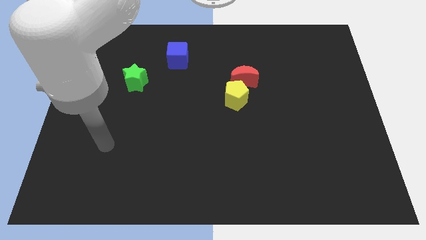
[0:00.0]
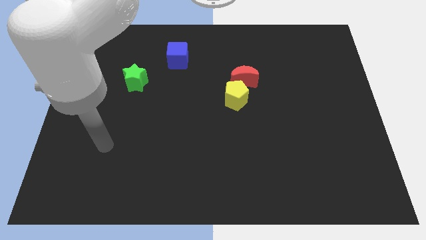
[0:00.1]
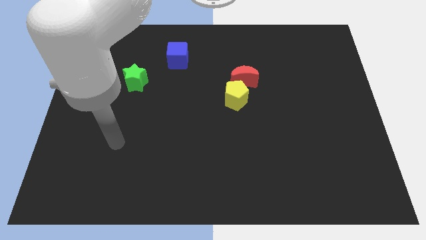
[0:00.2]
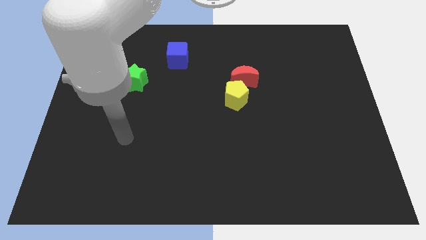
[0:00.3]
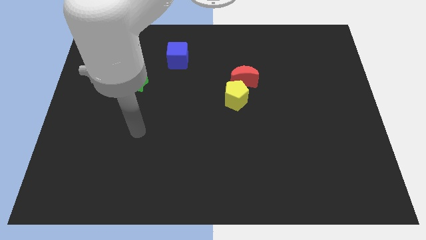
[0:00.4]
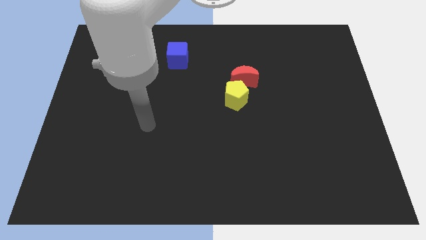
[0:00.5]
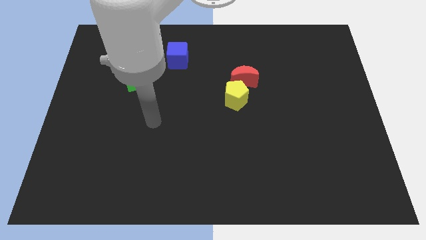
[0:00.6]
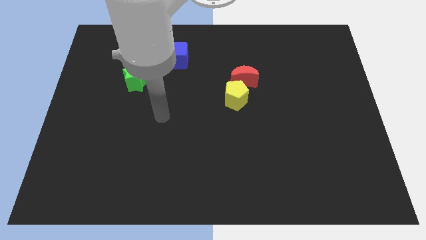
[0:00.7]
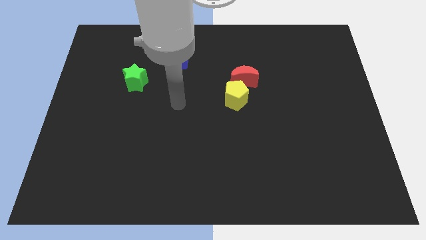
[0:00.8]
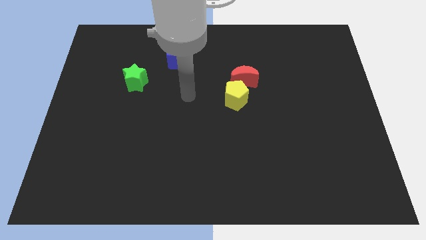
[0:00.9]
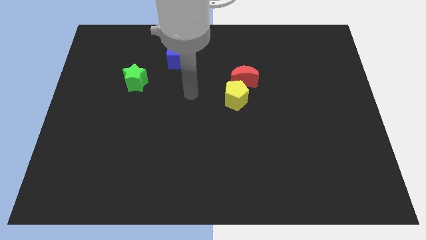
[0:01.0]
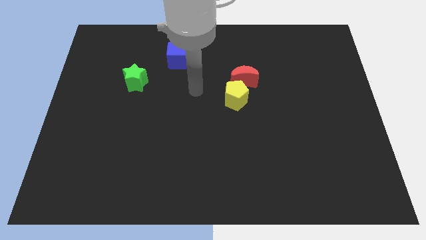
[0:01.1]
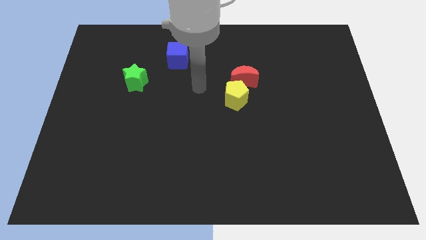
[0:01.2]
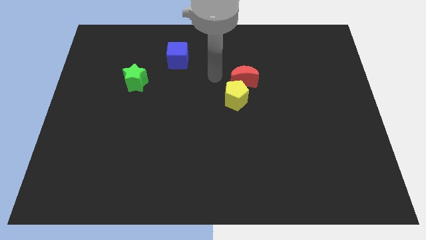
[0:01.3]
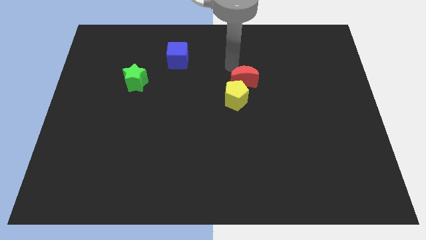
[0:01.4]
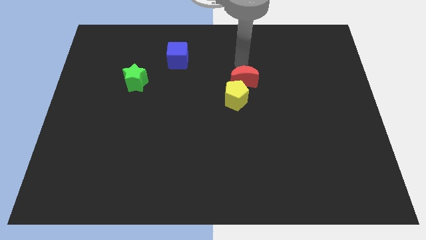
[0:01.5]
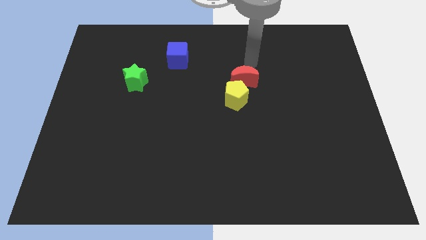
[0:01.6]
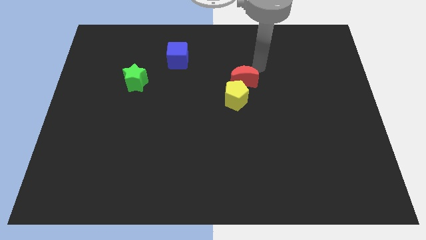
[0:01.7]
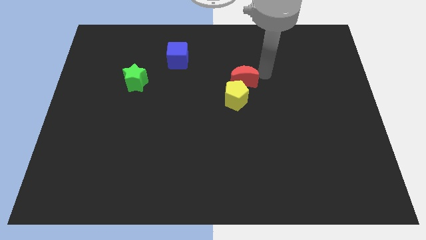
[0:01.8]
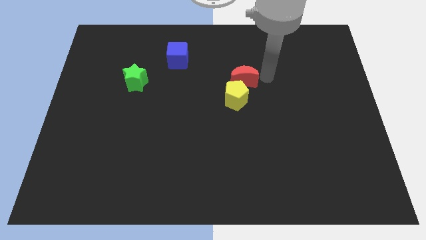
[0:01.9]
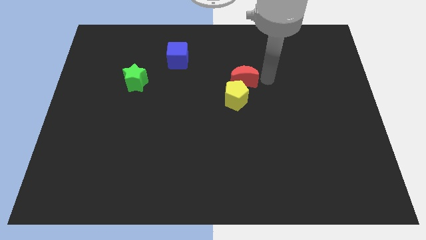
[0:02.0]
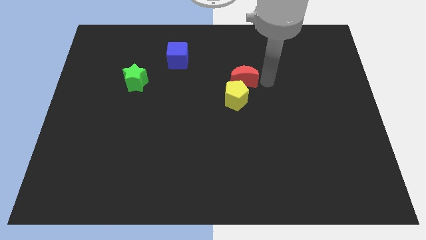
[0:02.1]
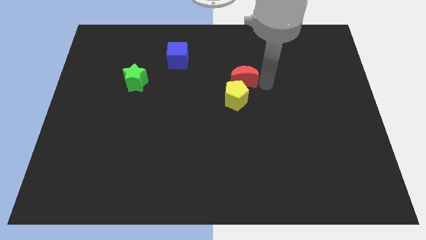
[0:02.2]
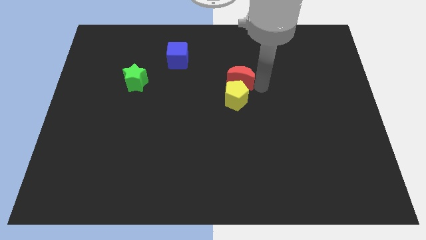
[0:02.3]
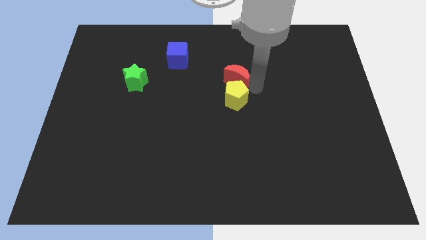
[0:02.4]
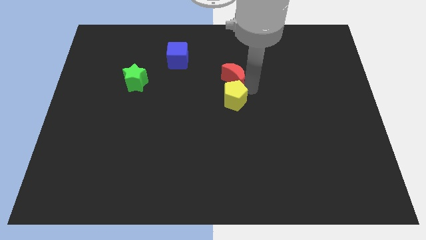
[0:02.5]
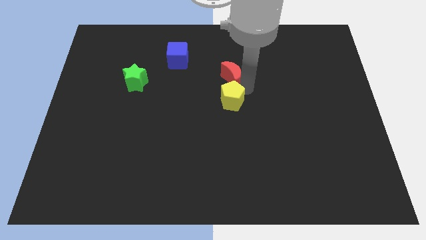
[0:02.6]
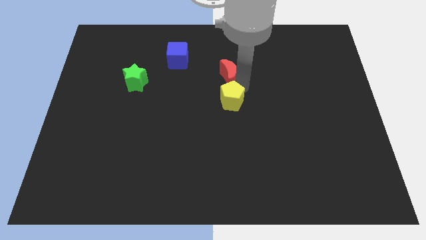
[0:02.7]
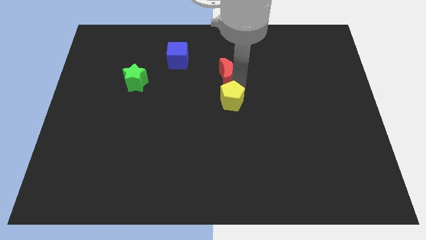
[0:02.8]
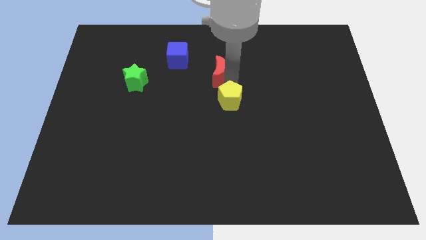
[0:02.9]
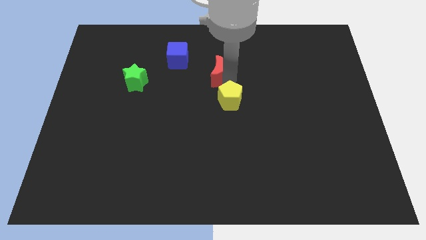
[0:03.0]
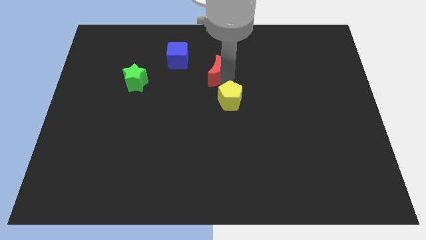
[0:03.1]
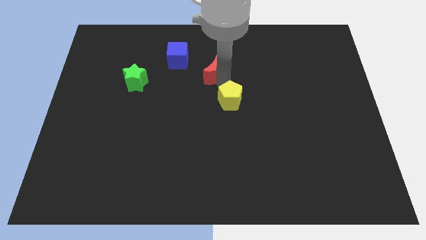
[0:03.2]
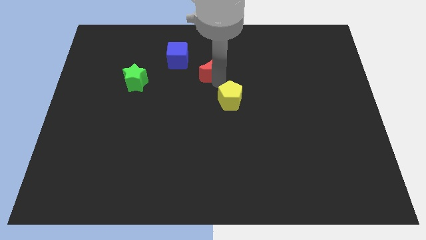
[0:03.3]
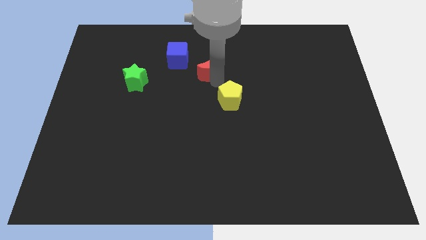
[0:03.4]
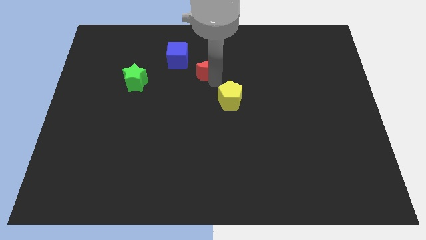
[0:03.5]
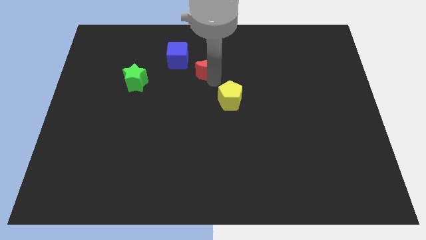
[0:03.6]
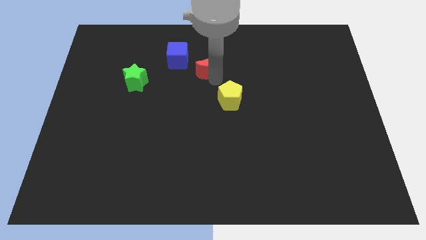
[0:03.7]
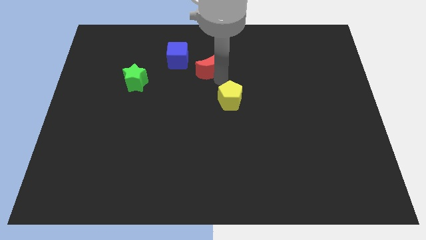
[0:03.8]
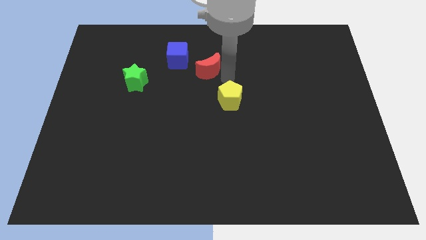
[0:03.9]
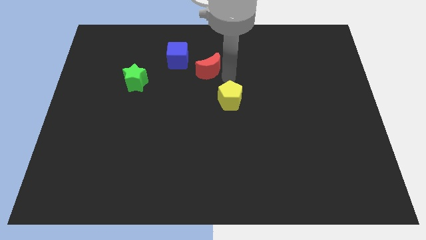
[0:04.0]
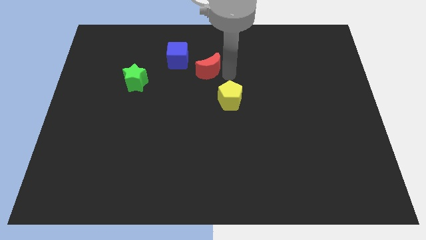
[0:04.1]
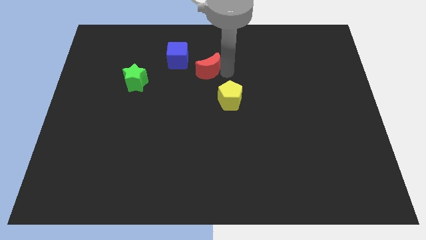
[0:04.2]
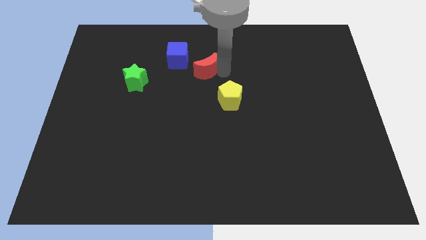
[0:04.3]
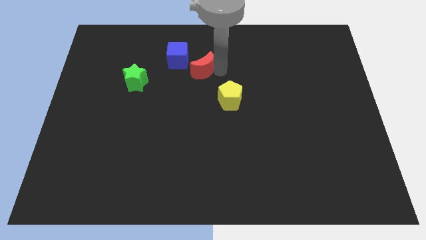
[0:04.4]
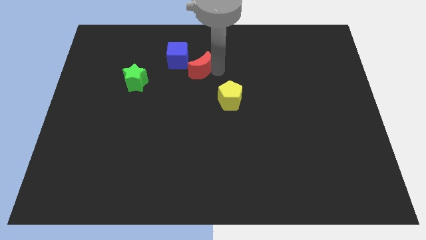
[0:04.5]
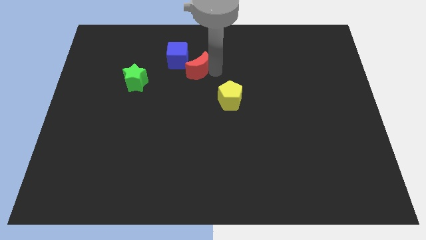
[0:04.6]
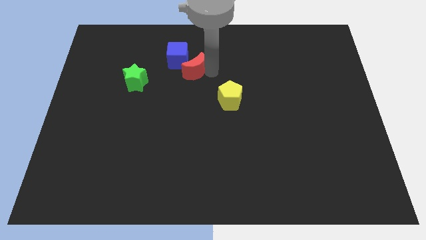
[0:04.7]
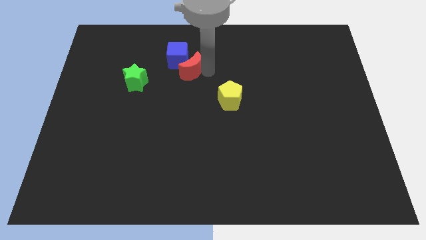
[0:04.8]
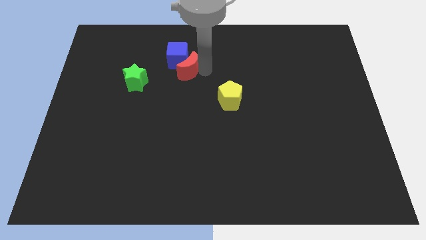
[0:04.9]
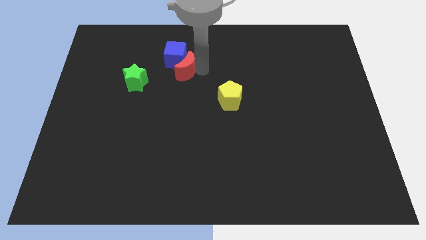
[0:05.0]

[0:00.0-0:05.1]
slide the red block next to the cube

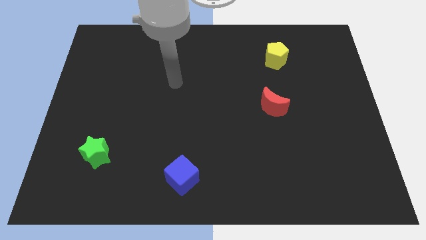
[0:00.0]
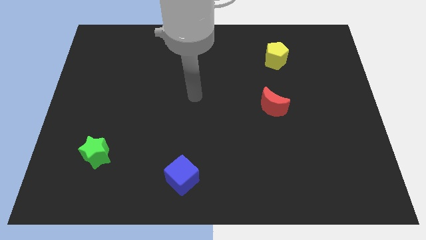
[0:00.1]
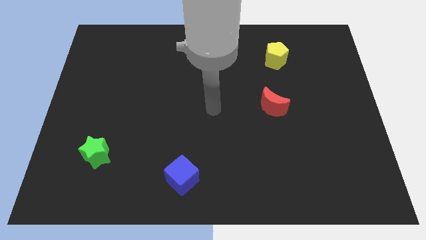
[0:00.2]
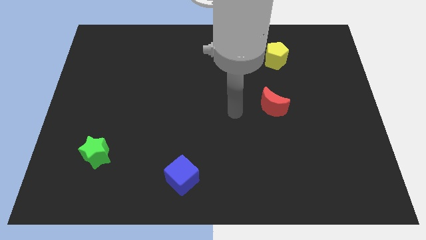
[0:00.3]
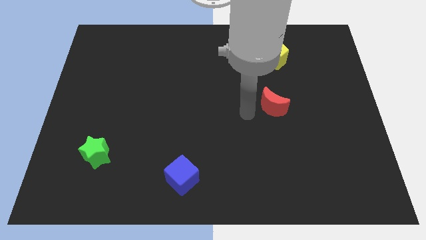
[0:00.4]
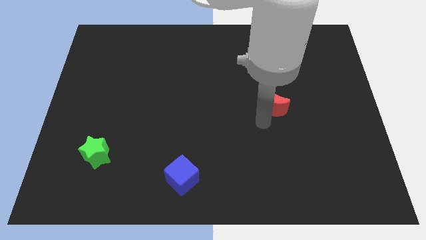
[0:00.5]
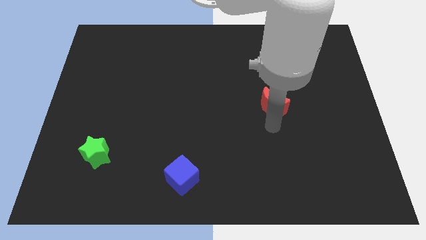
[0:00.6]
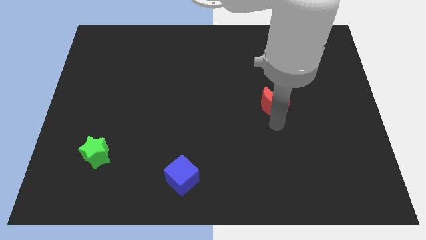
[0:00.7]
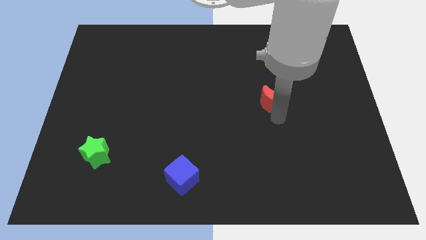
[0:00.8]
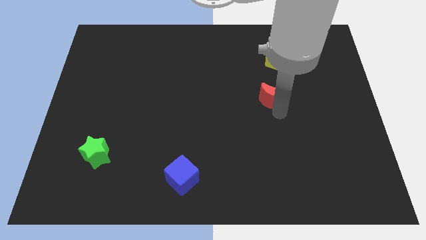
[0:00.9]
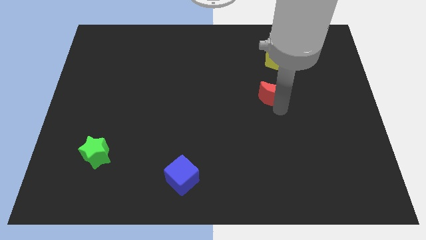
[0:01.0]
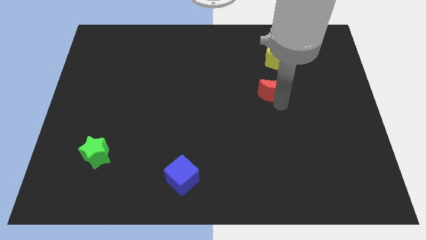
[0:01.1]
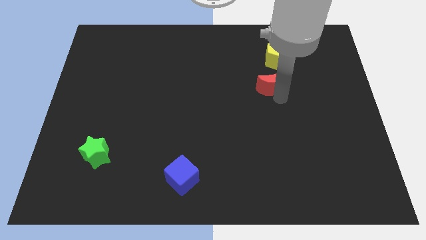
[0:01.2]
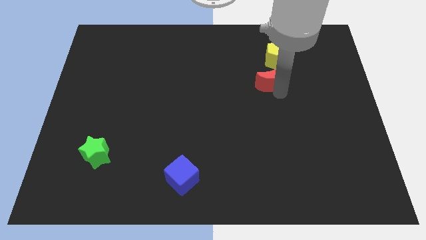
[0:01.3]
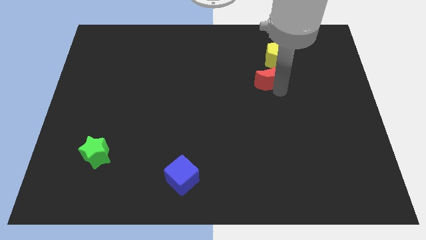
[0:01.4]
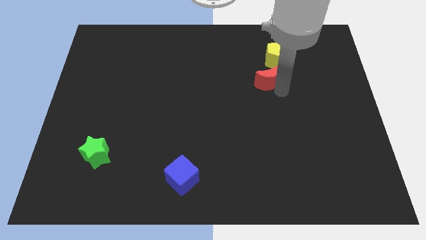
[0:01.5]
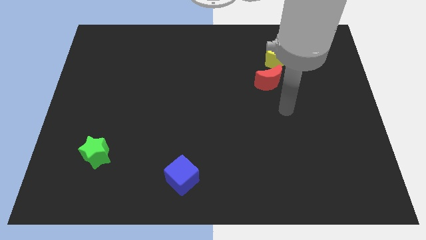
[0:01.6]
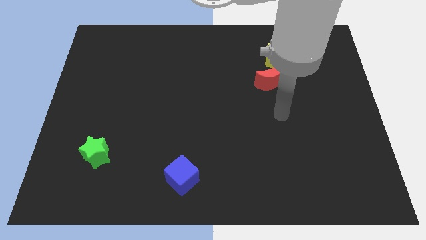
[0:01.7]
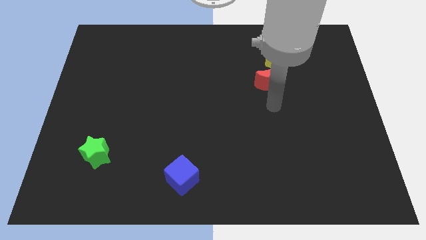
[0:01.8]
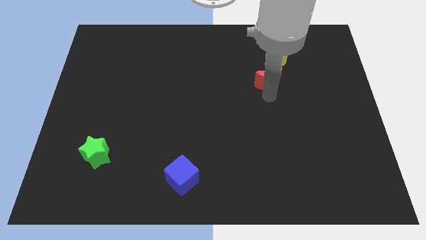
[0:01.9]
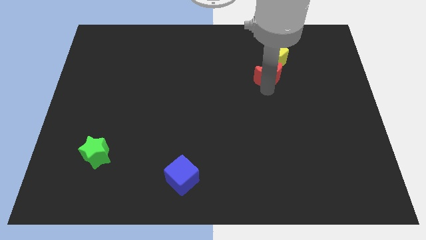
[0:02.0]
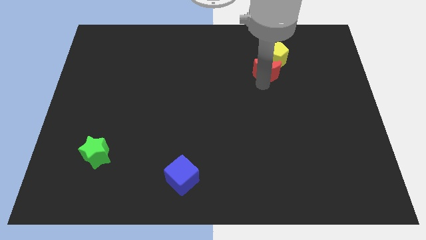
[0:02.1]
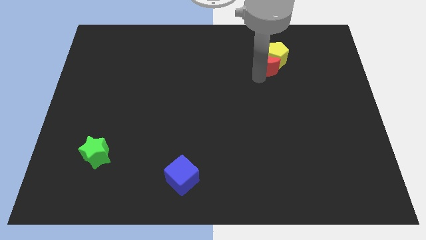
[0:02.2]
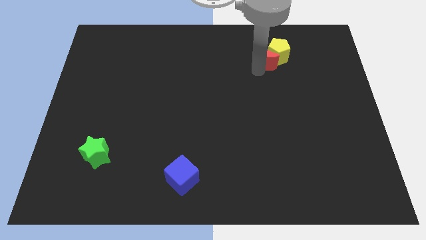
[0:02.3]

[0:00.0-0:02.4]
put the red moon next to the yellow pentagon

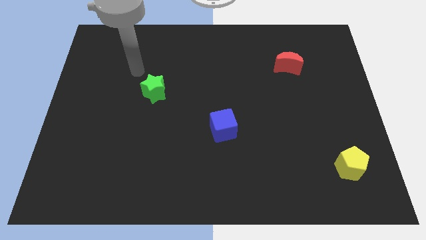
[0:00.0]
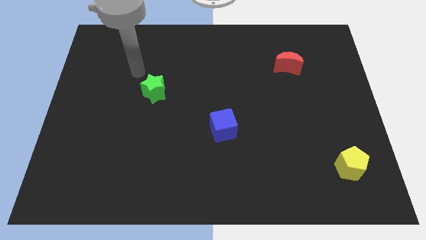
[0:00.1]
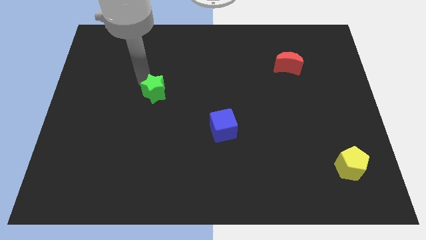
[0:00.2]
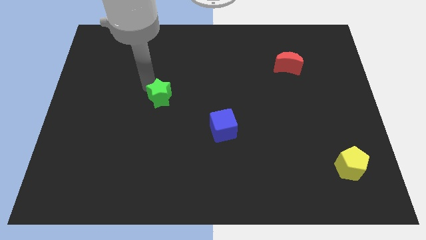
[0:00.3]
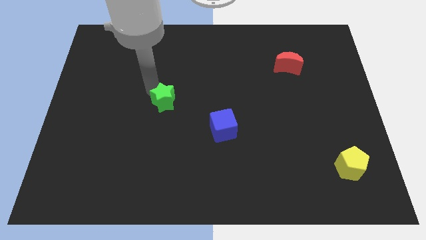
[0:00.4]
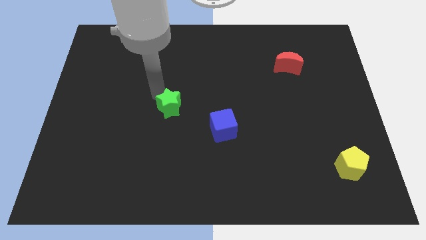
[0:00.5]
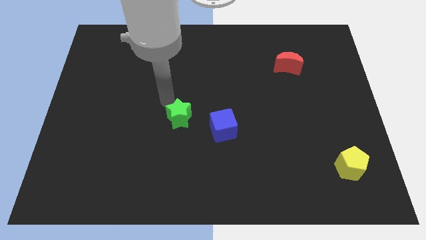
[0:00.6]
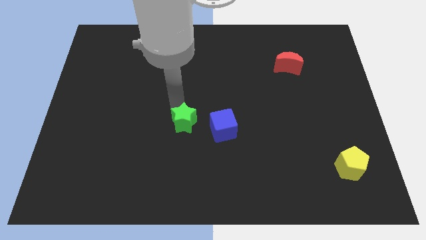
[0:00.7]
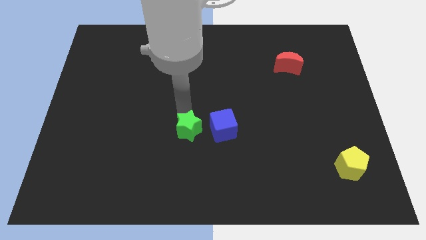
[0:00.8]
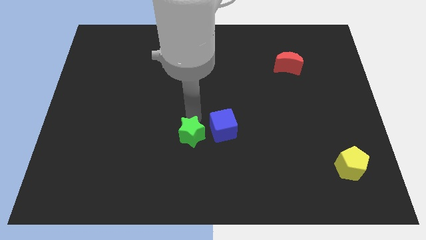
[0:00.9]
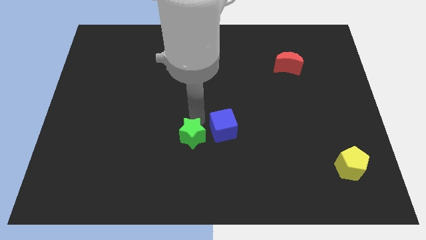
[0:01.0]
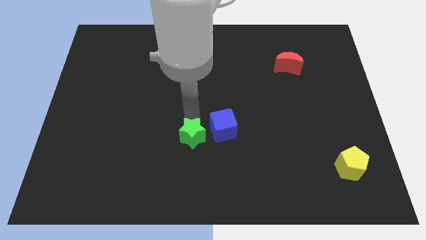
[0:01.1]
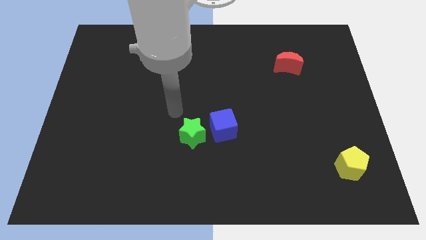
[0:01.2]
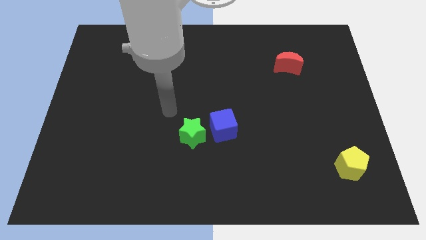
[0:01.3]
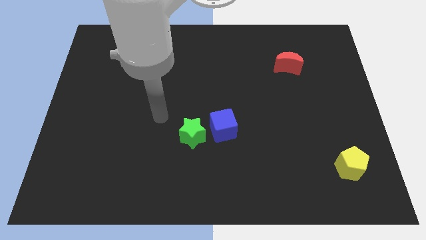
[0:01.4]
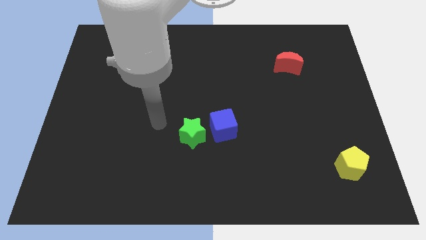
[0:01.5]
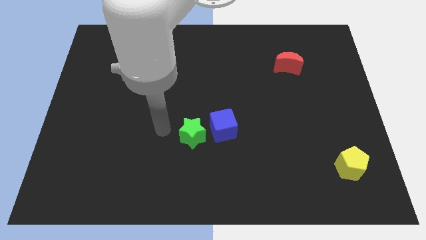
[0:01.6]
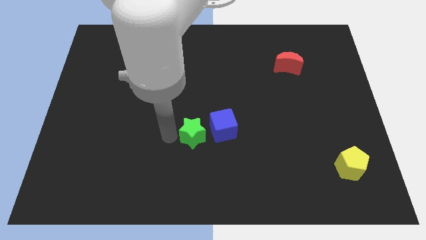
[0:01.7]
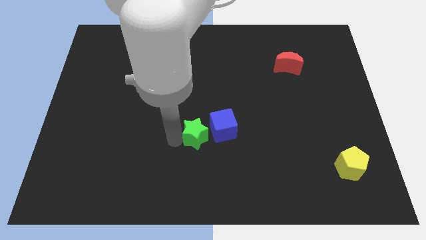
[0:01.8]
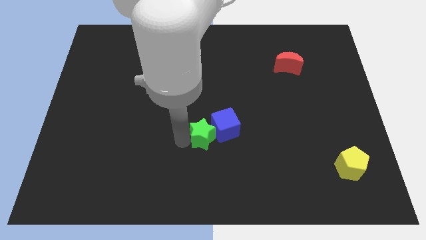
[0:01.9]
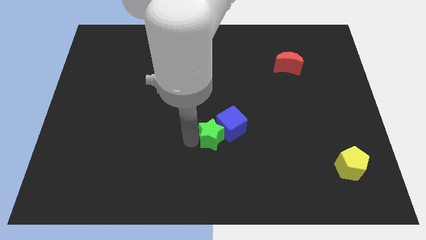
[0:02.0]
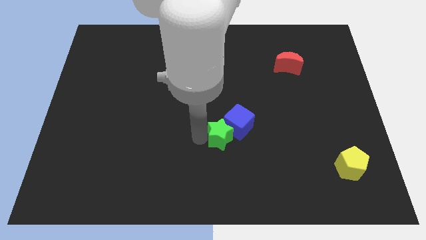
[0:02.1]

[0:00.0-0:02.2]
push the green star to the cube
